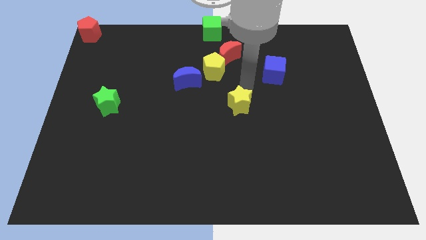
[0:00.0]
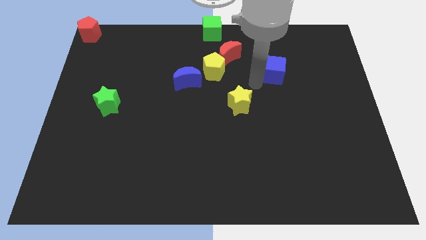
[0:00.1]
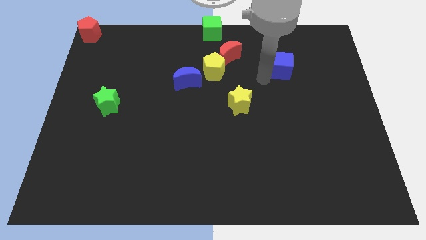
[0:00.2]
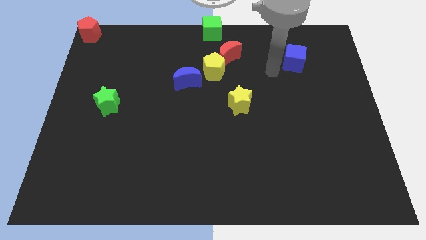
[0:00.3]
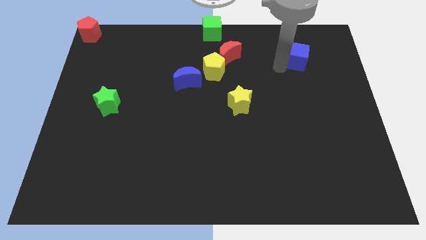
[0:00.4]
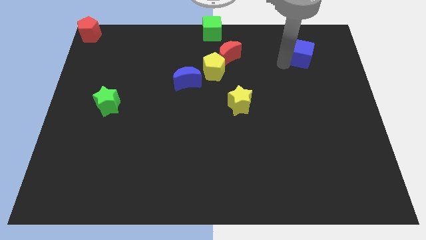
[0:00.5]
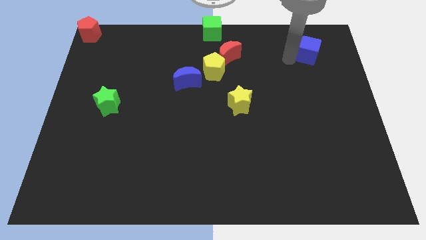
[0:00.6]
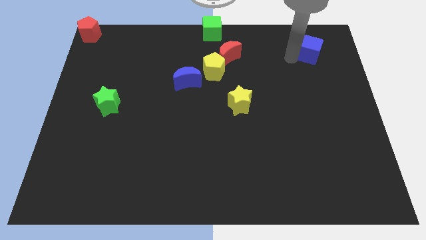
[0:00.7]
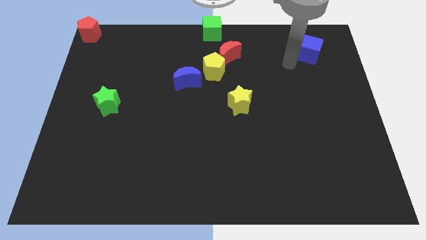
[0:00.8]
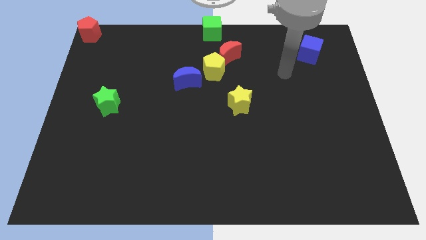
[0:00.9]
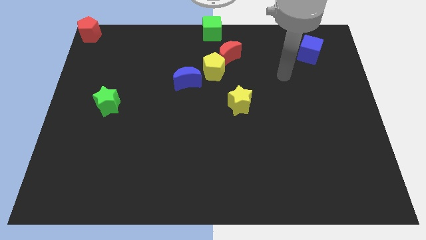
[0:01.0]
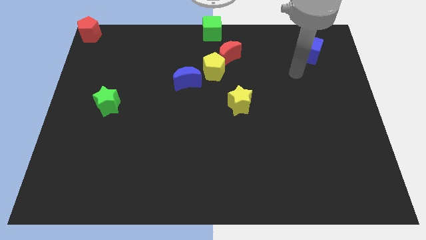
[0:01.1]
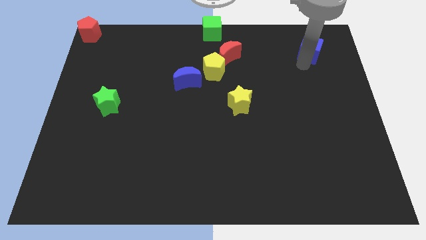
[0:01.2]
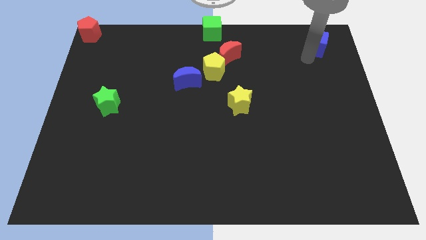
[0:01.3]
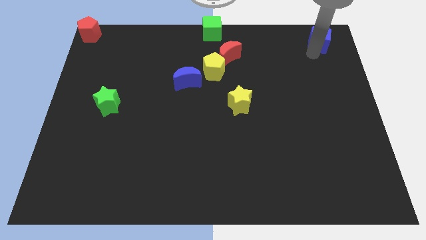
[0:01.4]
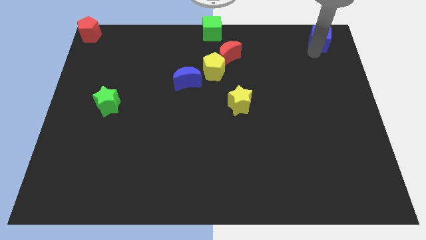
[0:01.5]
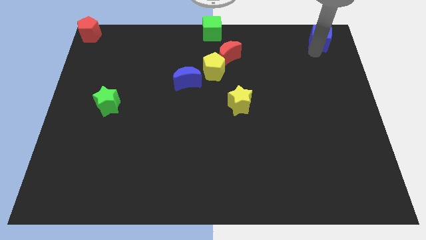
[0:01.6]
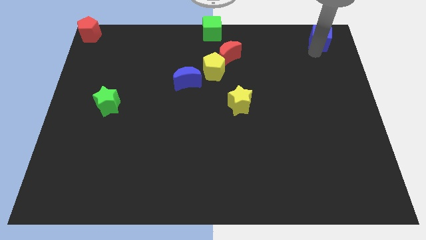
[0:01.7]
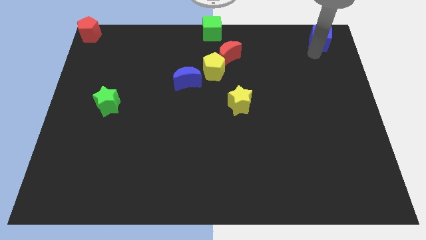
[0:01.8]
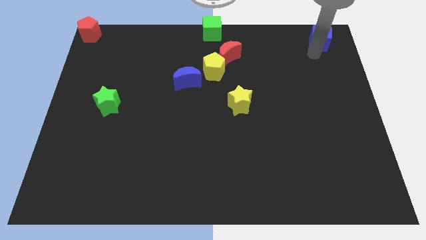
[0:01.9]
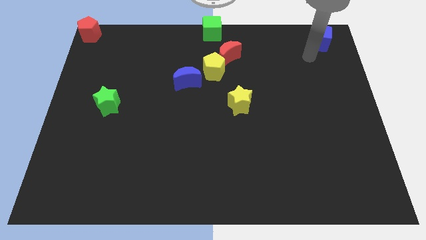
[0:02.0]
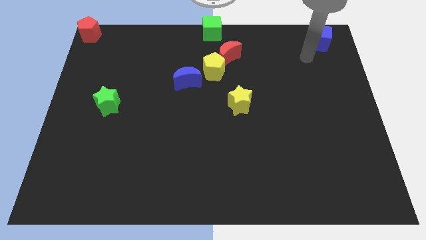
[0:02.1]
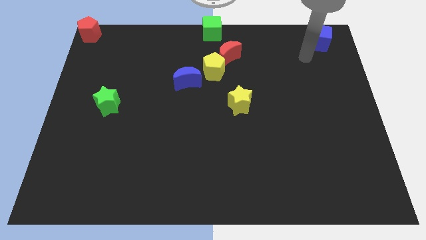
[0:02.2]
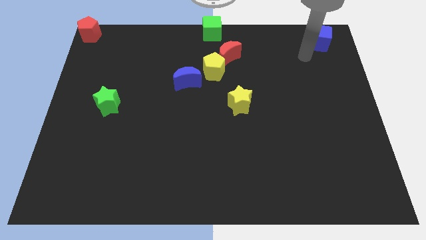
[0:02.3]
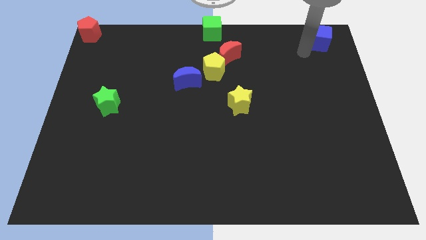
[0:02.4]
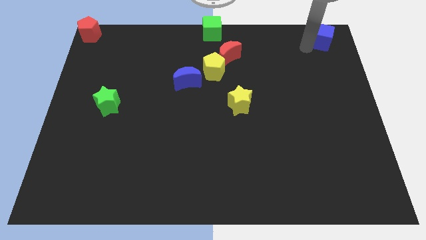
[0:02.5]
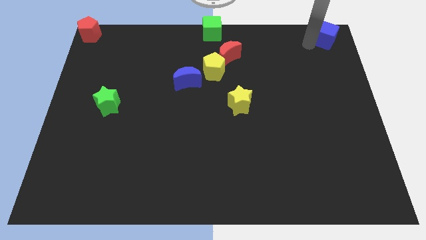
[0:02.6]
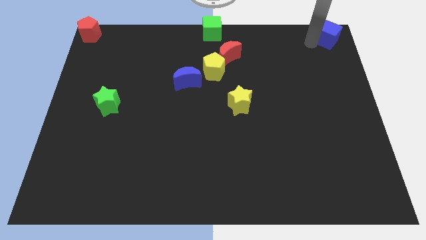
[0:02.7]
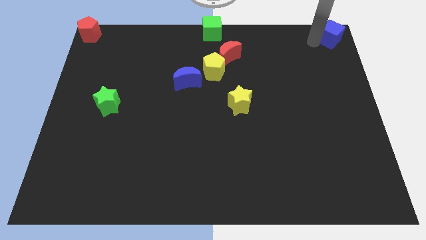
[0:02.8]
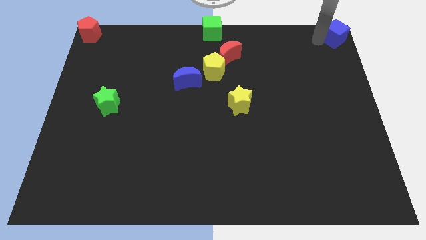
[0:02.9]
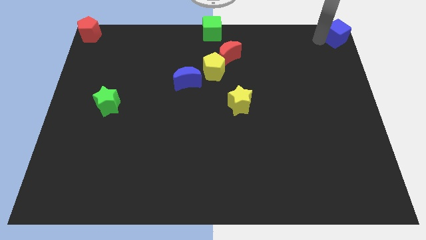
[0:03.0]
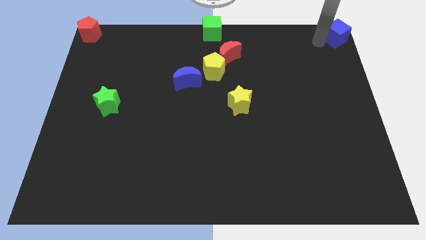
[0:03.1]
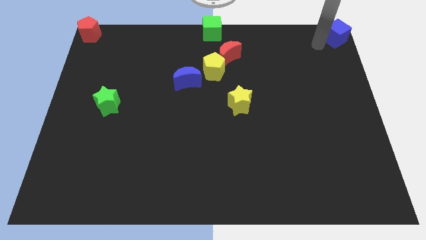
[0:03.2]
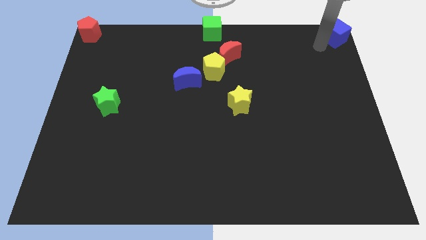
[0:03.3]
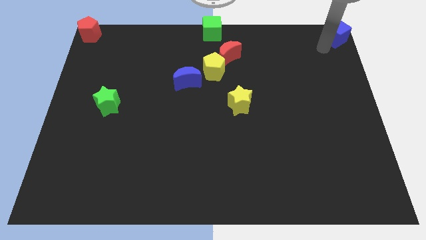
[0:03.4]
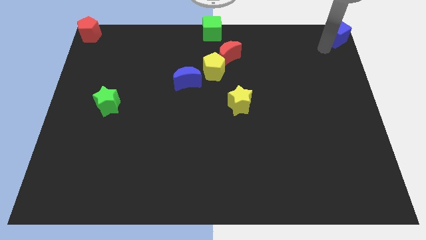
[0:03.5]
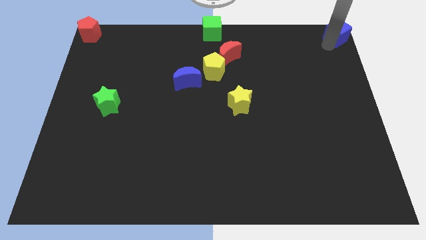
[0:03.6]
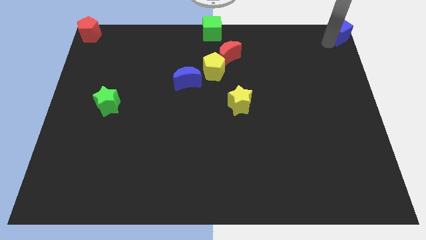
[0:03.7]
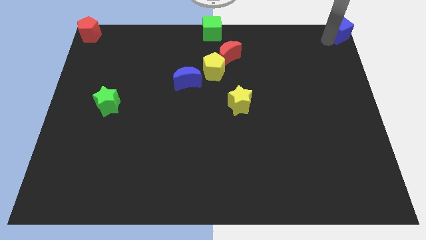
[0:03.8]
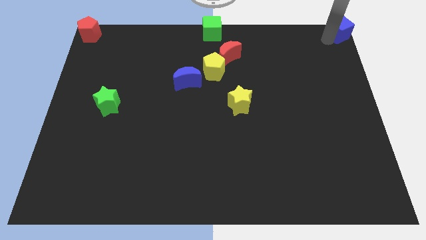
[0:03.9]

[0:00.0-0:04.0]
move the blue cube to the top right corner of the board

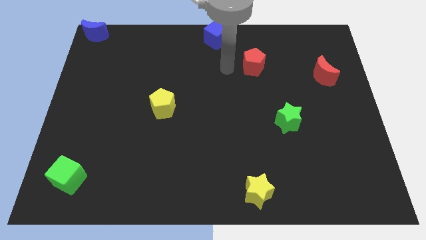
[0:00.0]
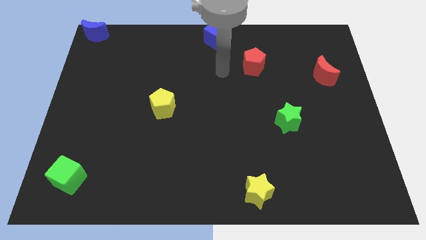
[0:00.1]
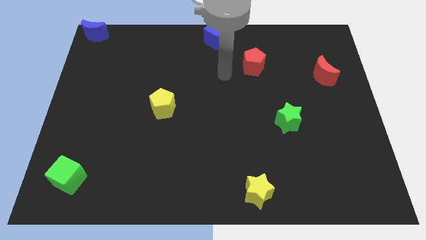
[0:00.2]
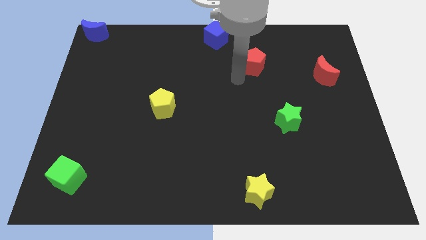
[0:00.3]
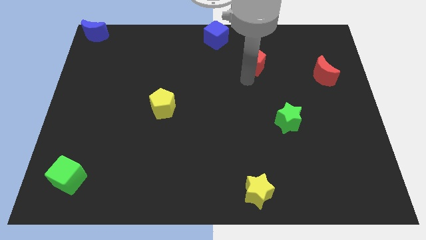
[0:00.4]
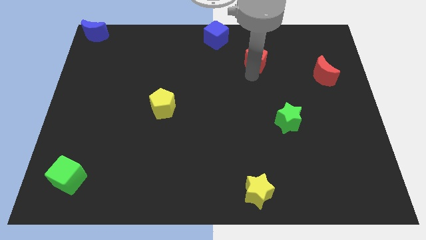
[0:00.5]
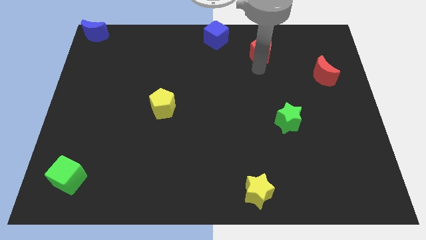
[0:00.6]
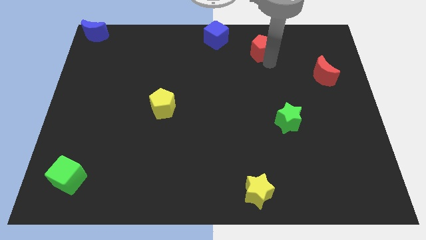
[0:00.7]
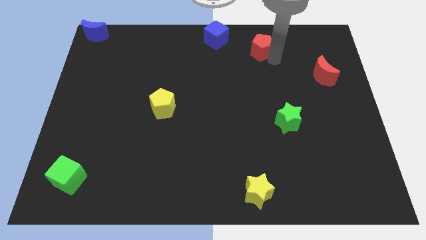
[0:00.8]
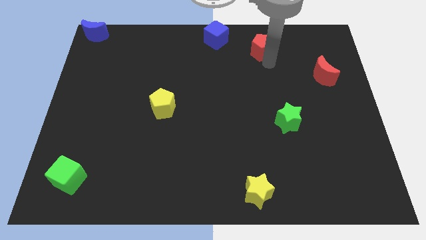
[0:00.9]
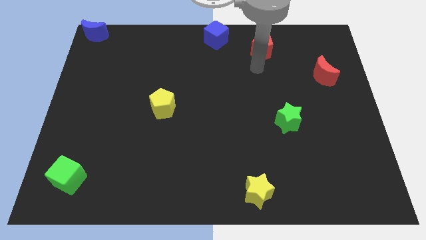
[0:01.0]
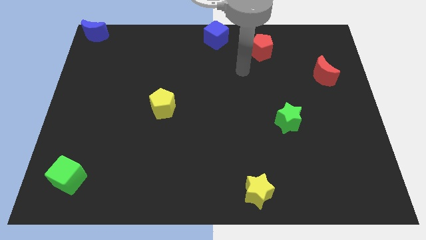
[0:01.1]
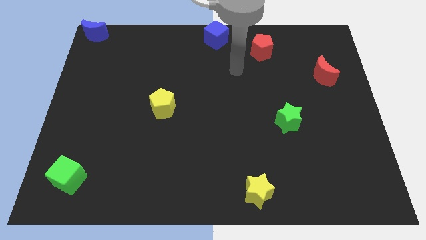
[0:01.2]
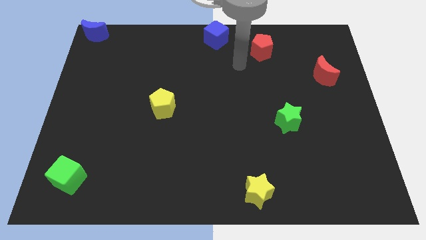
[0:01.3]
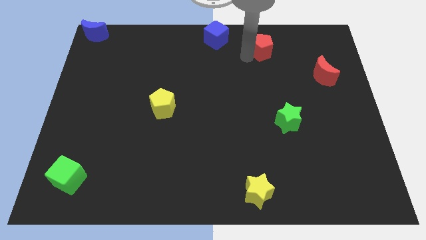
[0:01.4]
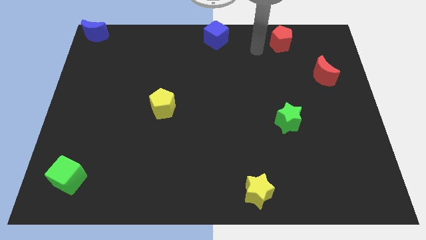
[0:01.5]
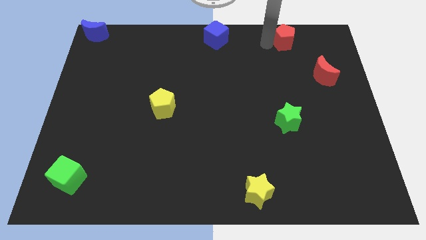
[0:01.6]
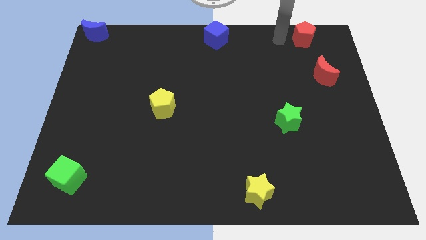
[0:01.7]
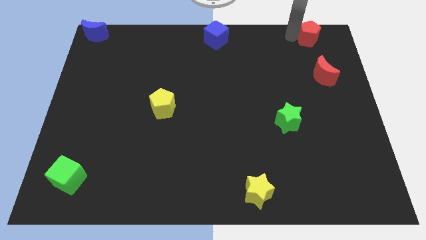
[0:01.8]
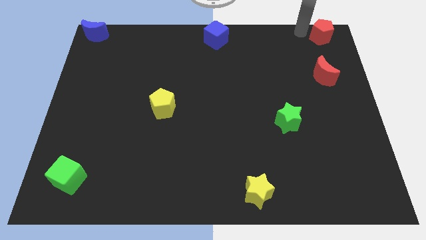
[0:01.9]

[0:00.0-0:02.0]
move the red pentagon to the top of the red crescent

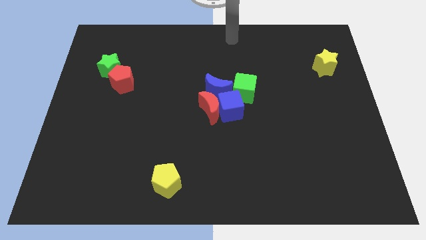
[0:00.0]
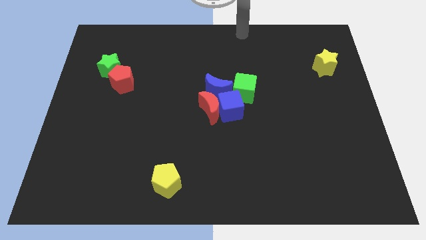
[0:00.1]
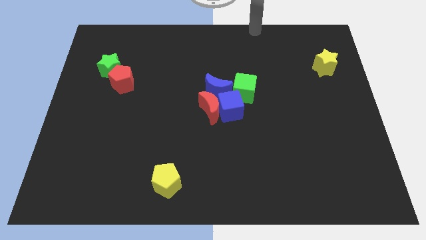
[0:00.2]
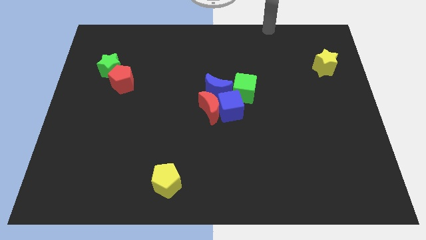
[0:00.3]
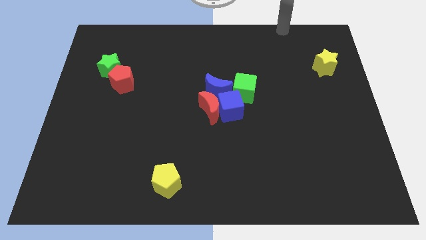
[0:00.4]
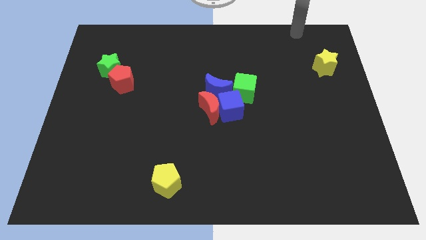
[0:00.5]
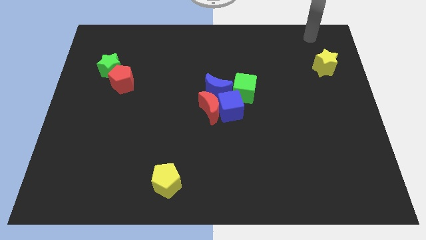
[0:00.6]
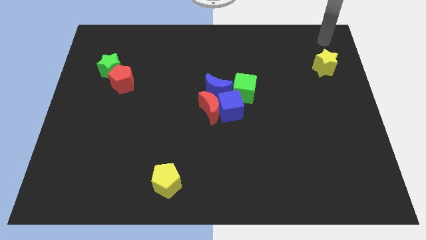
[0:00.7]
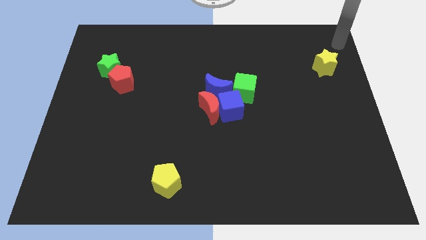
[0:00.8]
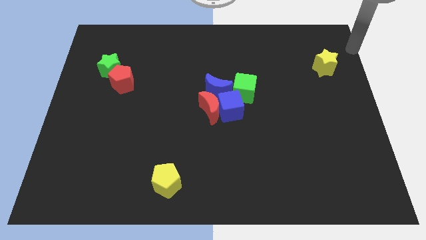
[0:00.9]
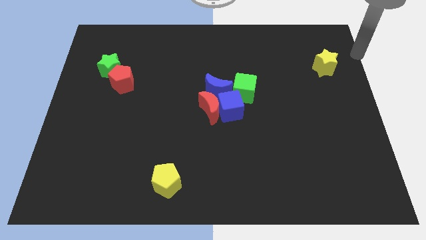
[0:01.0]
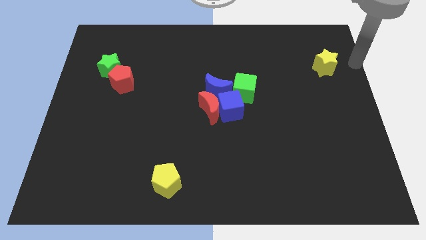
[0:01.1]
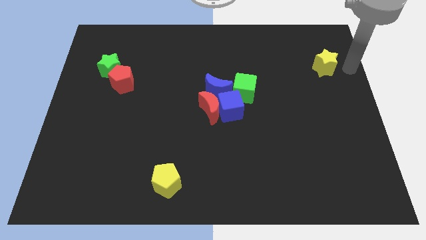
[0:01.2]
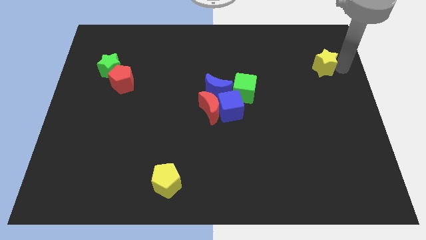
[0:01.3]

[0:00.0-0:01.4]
move your arm towards yellow star

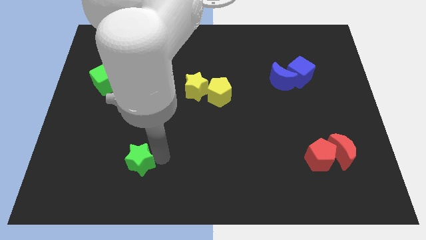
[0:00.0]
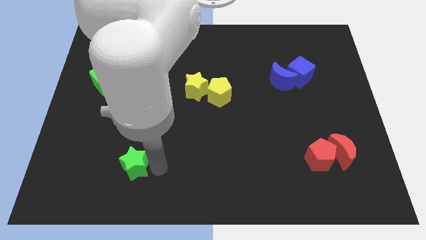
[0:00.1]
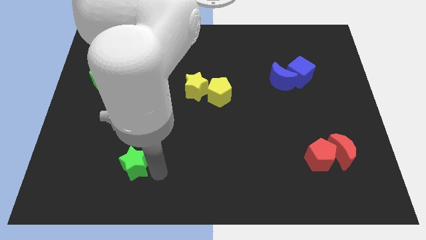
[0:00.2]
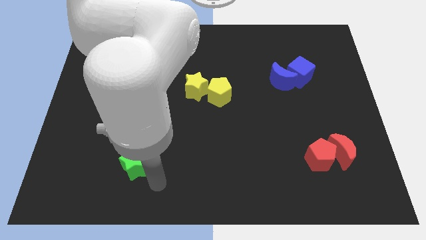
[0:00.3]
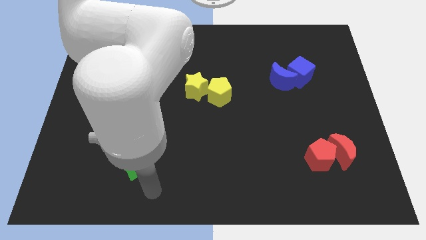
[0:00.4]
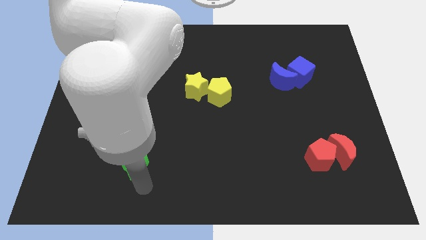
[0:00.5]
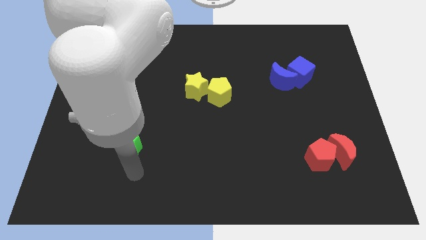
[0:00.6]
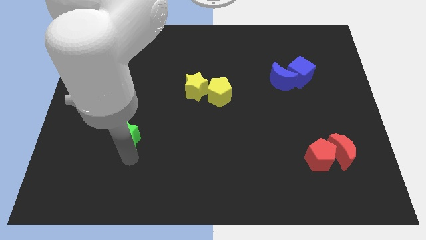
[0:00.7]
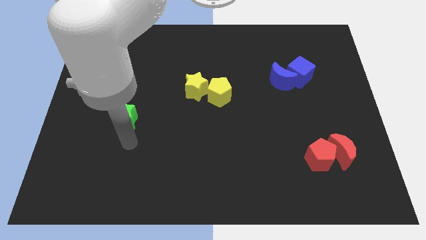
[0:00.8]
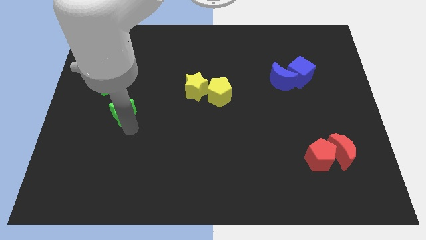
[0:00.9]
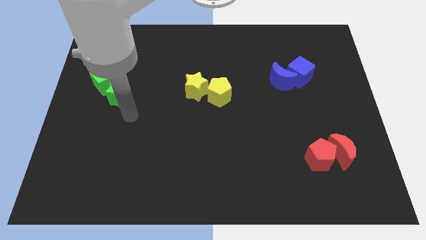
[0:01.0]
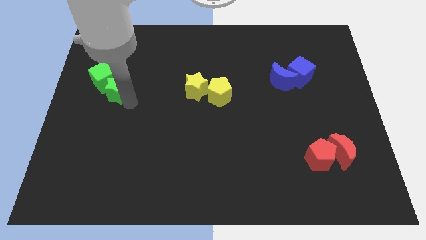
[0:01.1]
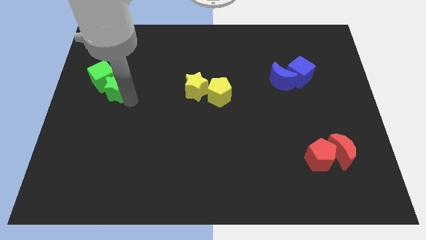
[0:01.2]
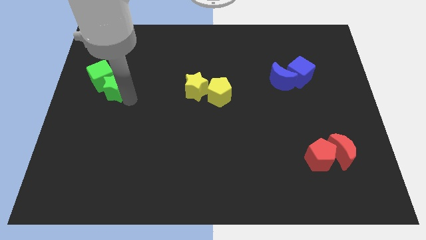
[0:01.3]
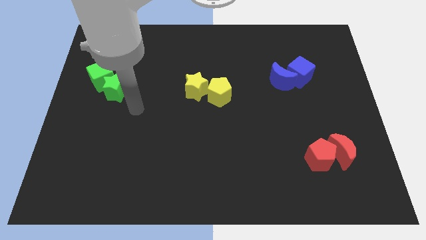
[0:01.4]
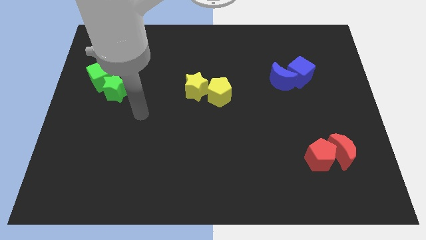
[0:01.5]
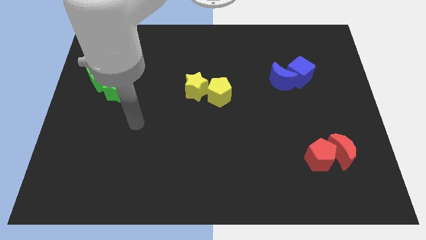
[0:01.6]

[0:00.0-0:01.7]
push the green star into the green cube
